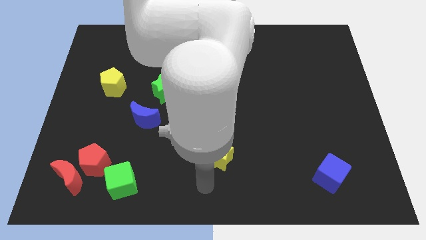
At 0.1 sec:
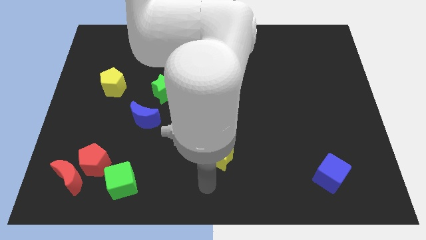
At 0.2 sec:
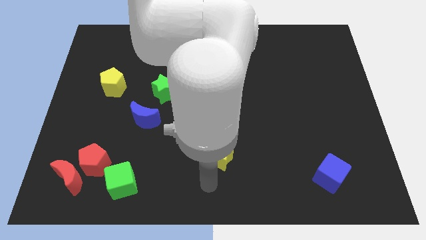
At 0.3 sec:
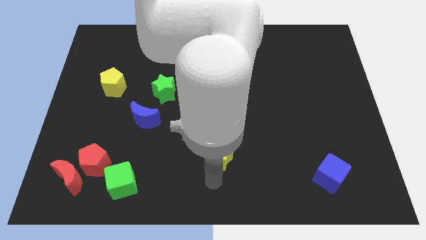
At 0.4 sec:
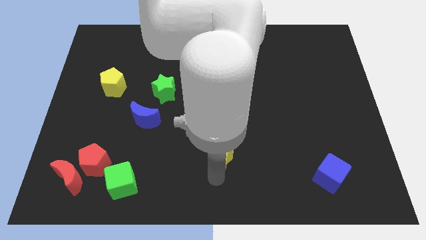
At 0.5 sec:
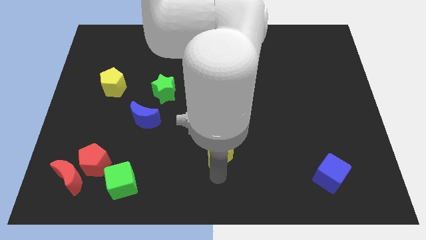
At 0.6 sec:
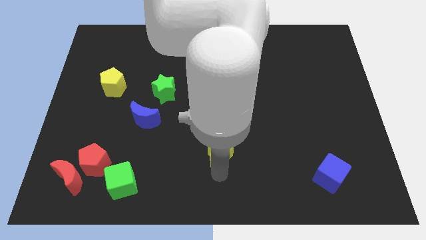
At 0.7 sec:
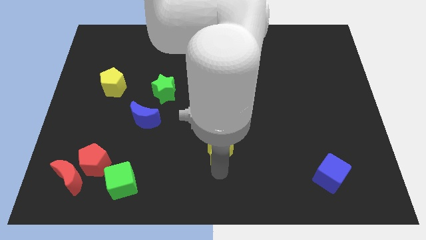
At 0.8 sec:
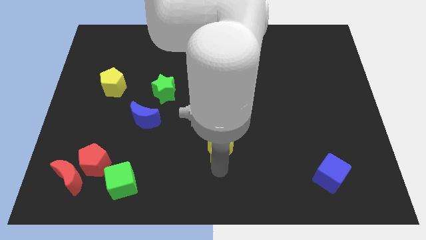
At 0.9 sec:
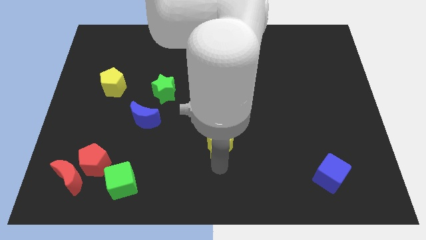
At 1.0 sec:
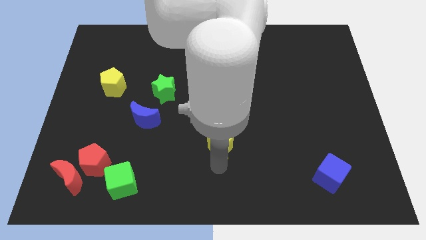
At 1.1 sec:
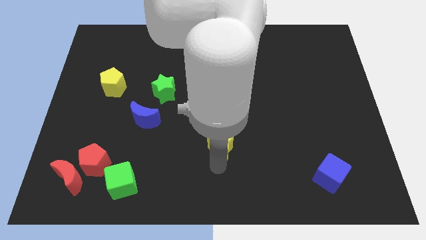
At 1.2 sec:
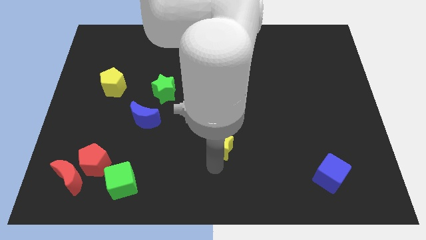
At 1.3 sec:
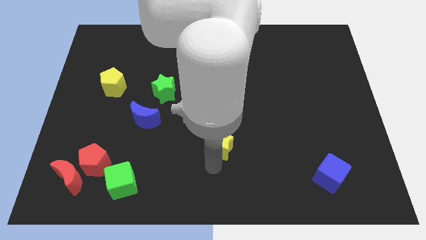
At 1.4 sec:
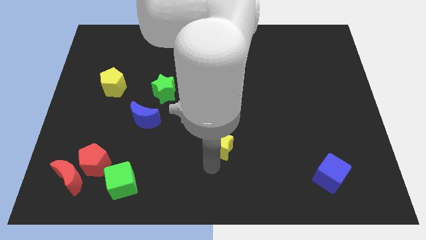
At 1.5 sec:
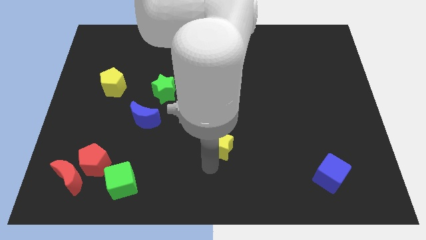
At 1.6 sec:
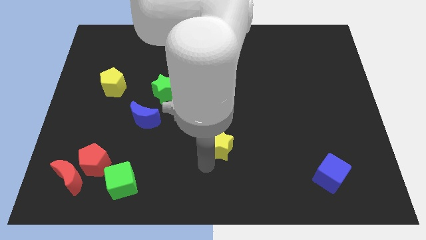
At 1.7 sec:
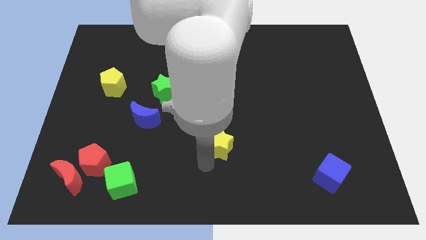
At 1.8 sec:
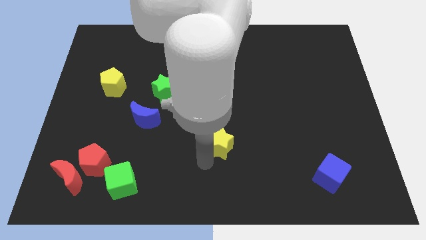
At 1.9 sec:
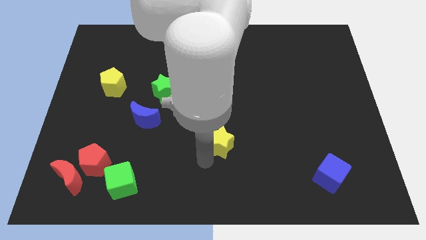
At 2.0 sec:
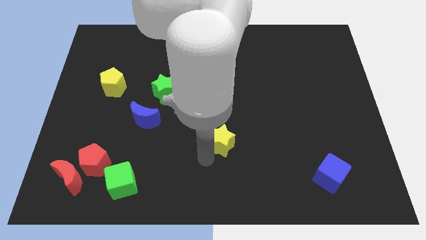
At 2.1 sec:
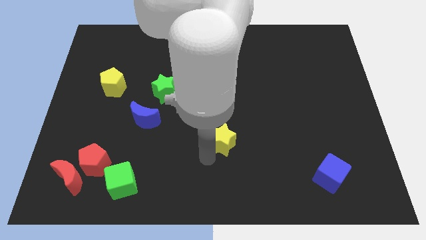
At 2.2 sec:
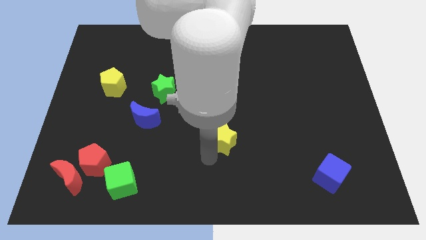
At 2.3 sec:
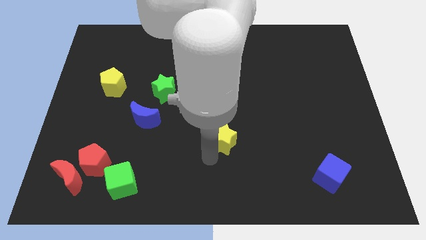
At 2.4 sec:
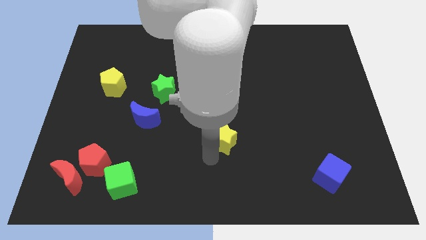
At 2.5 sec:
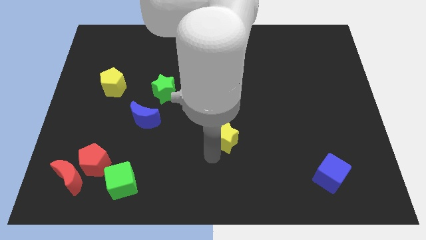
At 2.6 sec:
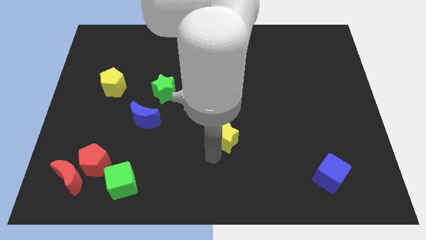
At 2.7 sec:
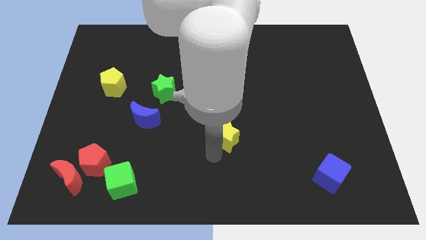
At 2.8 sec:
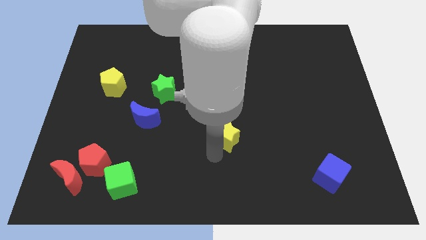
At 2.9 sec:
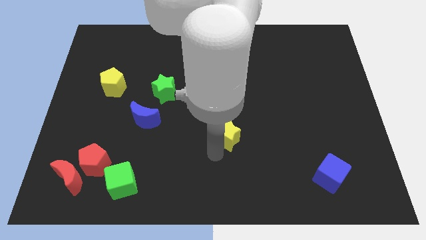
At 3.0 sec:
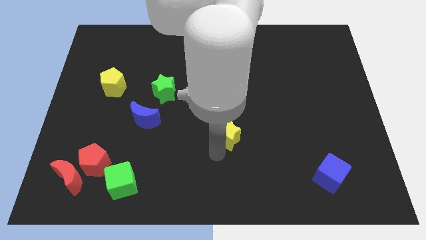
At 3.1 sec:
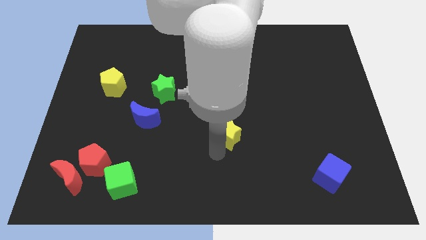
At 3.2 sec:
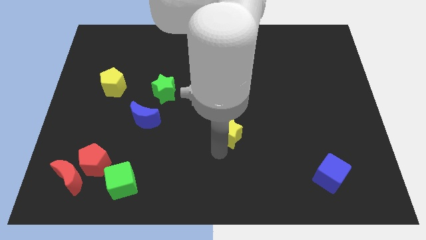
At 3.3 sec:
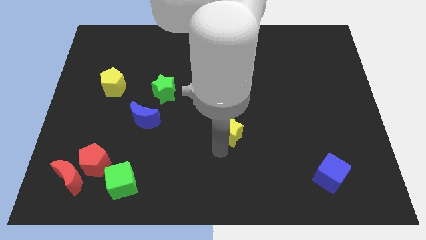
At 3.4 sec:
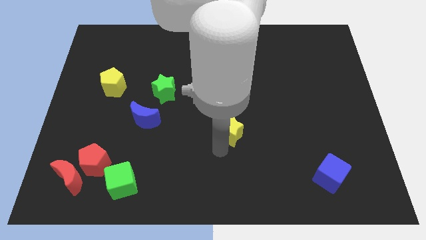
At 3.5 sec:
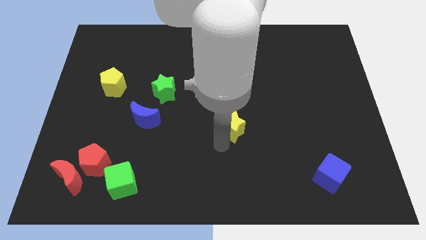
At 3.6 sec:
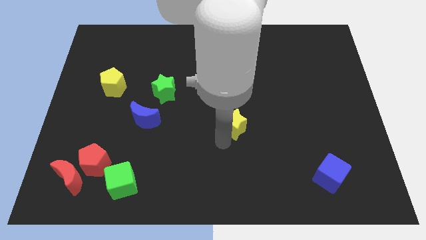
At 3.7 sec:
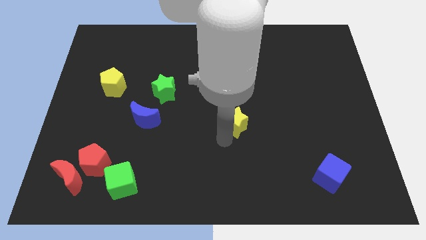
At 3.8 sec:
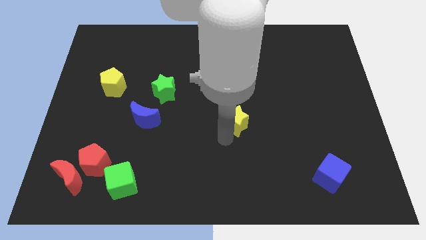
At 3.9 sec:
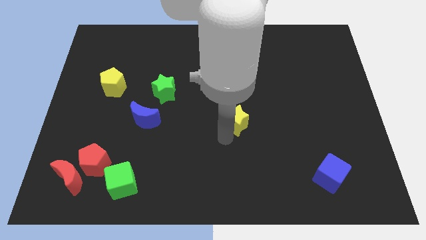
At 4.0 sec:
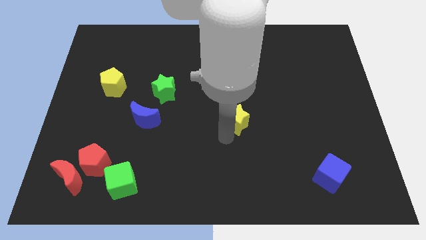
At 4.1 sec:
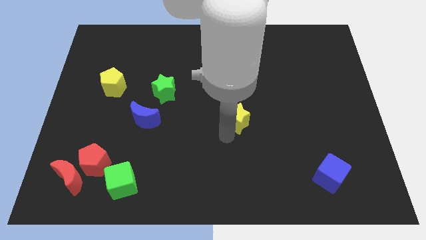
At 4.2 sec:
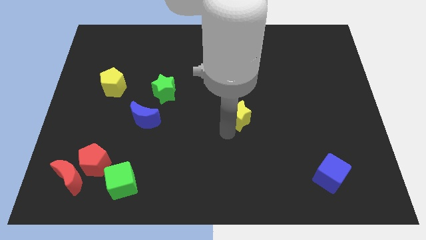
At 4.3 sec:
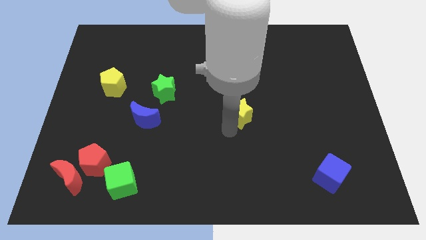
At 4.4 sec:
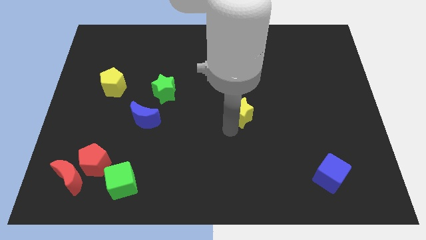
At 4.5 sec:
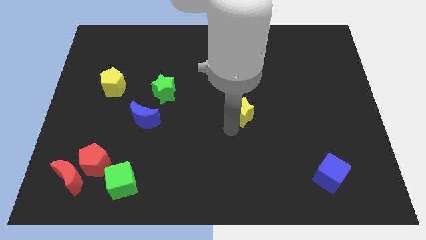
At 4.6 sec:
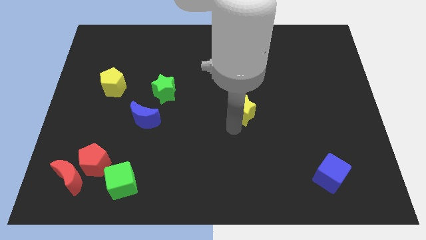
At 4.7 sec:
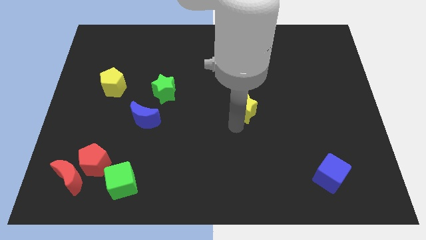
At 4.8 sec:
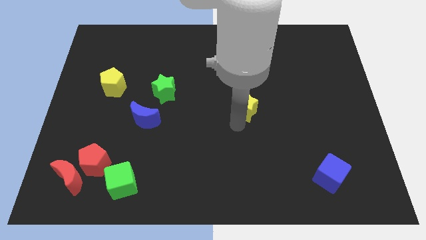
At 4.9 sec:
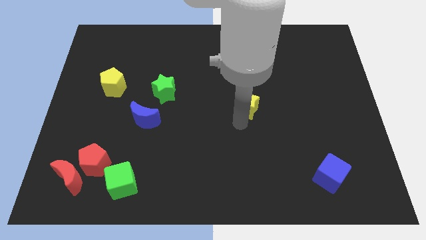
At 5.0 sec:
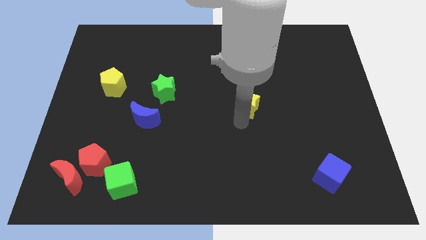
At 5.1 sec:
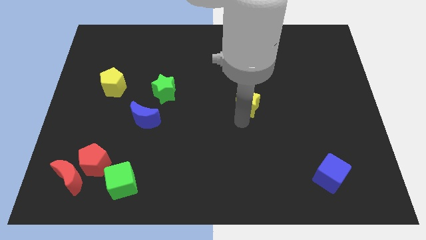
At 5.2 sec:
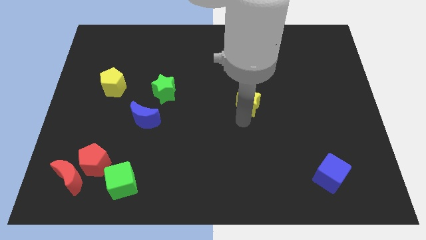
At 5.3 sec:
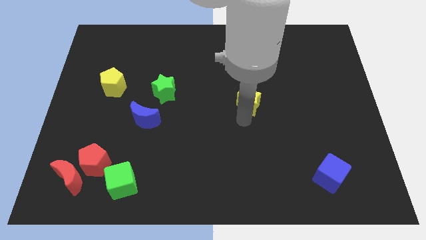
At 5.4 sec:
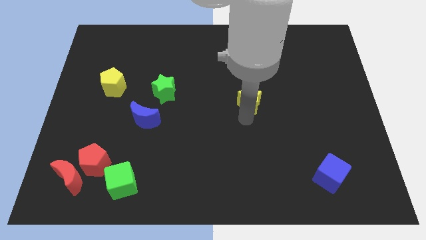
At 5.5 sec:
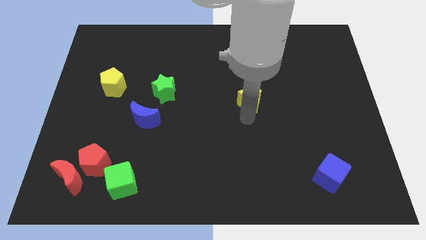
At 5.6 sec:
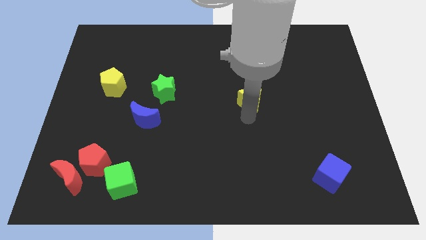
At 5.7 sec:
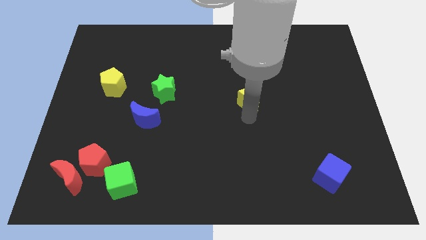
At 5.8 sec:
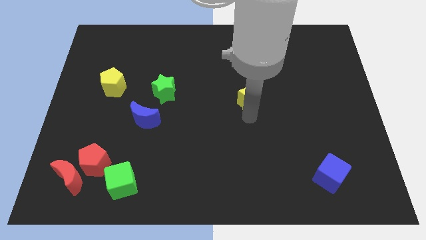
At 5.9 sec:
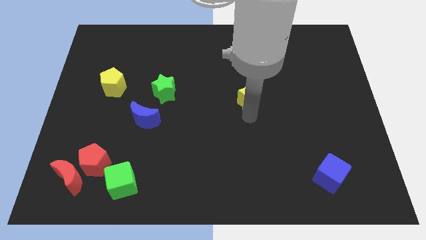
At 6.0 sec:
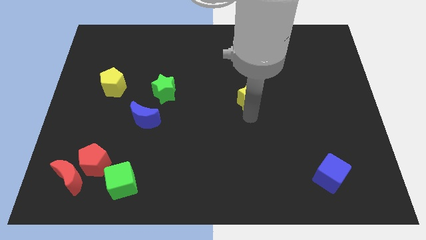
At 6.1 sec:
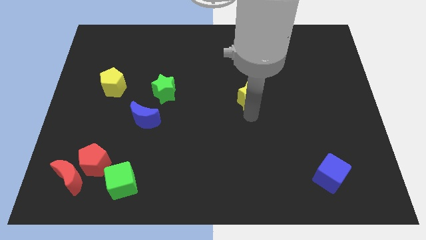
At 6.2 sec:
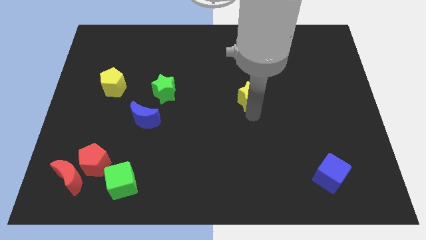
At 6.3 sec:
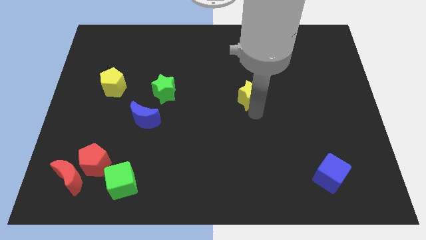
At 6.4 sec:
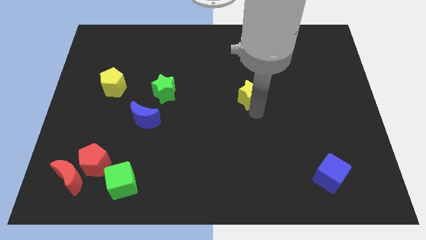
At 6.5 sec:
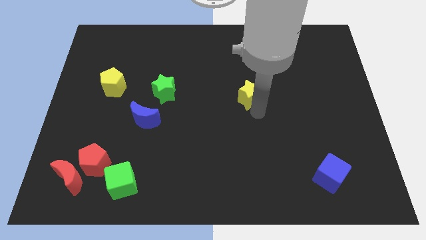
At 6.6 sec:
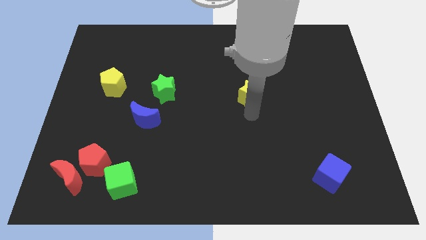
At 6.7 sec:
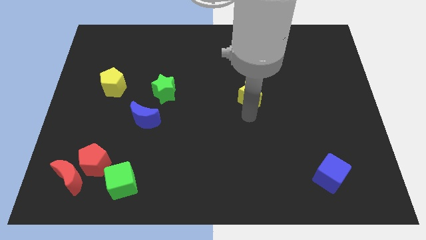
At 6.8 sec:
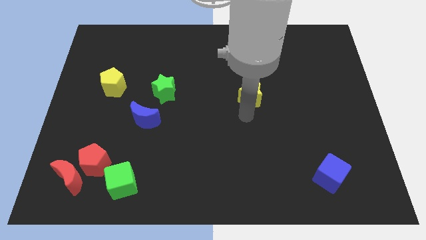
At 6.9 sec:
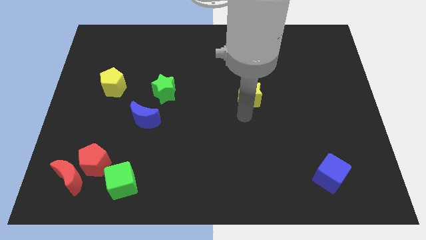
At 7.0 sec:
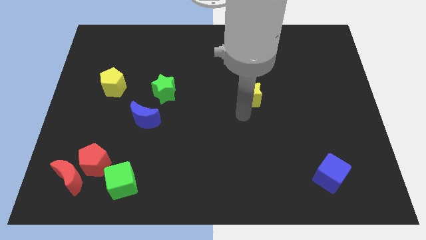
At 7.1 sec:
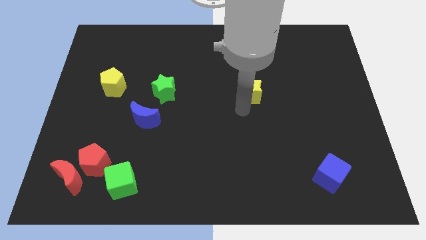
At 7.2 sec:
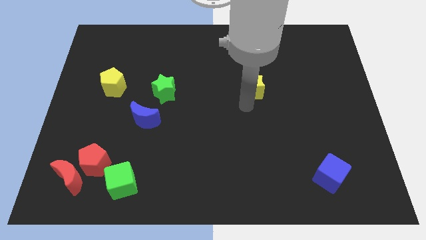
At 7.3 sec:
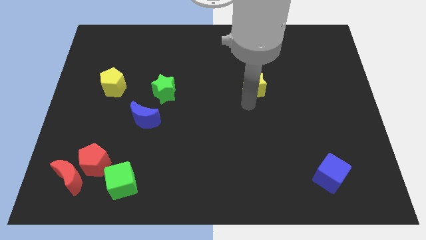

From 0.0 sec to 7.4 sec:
move the yellow star to the horizontal right side of the green star

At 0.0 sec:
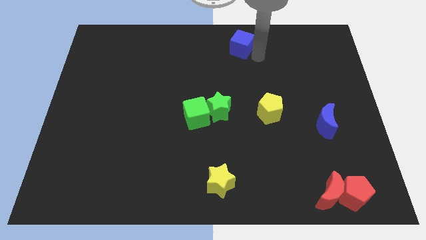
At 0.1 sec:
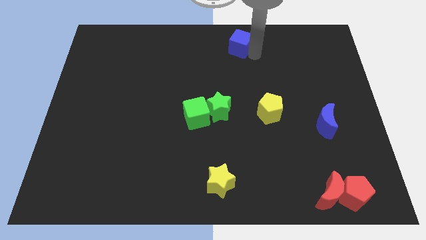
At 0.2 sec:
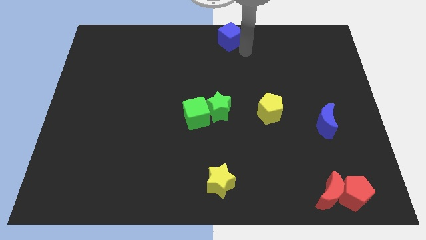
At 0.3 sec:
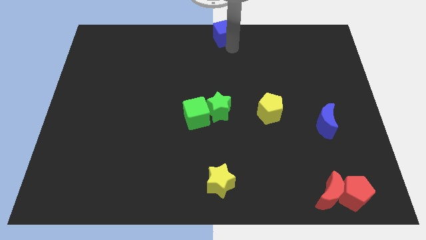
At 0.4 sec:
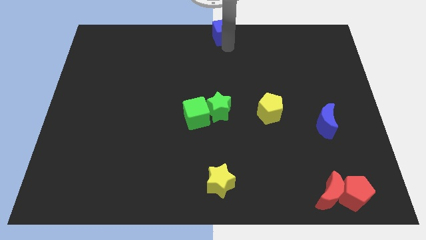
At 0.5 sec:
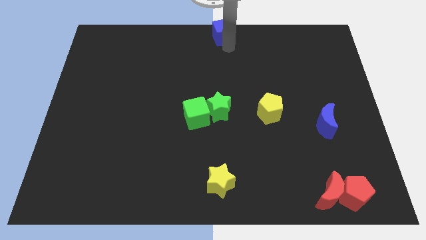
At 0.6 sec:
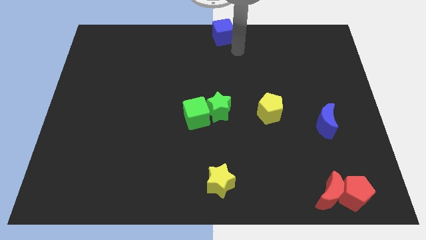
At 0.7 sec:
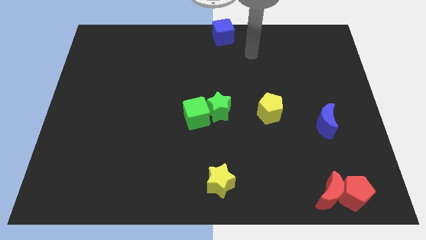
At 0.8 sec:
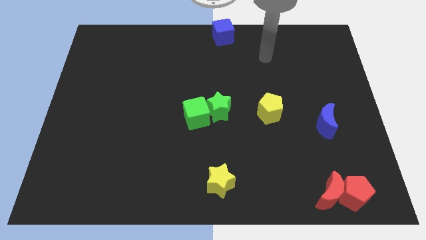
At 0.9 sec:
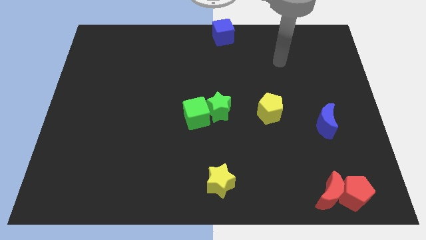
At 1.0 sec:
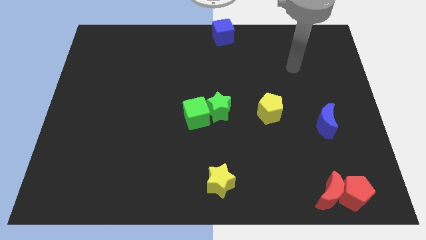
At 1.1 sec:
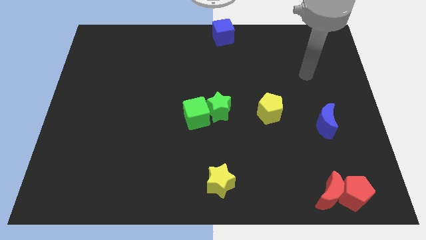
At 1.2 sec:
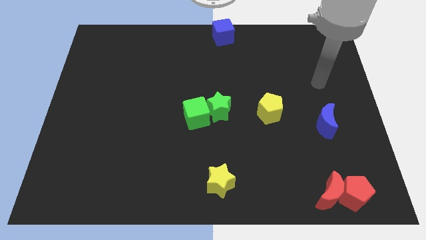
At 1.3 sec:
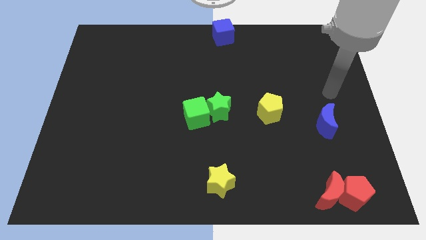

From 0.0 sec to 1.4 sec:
place the blue cube at the top center
